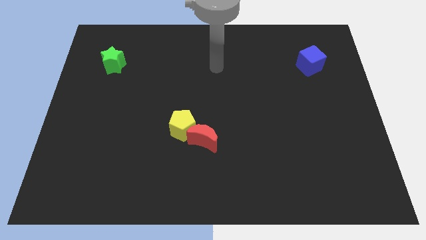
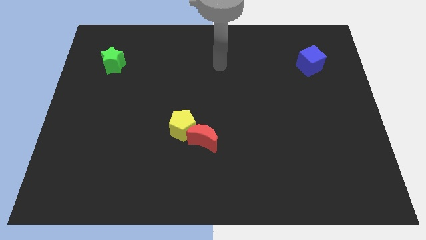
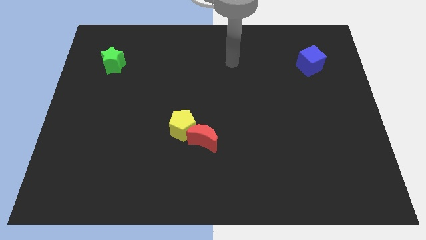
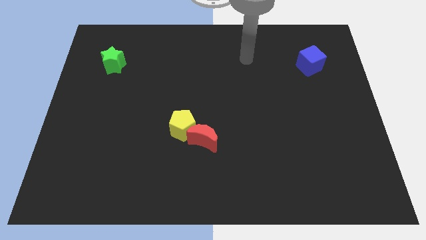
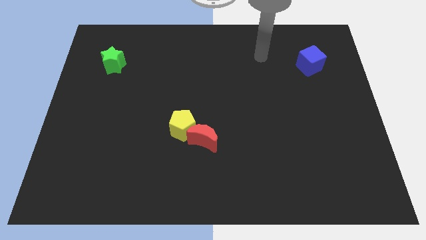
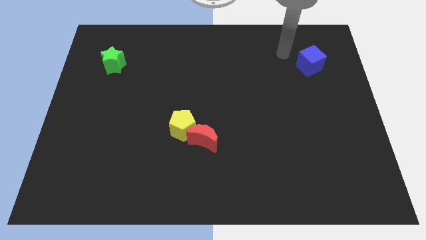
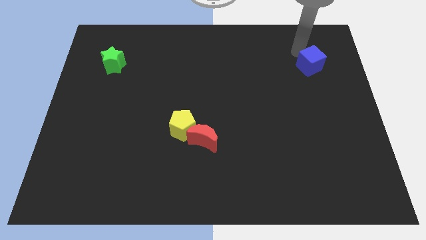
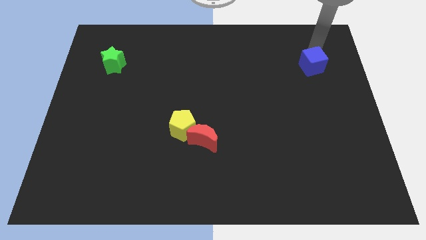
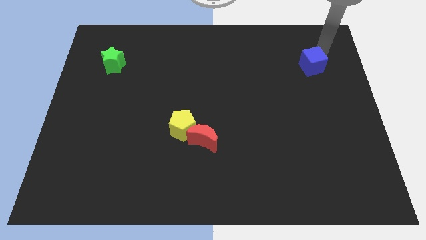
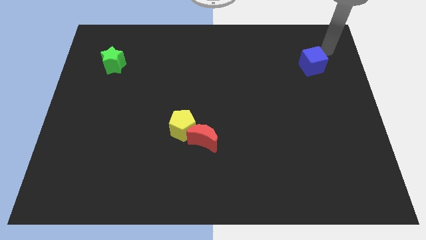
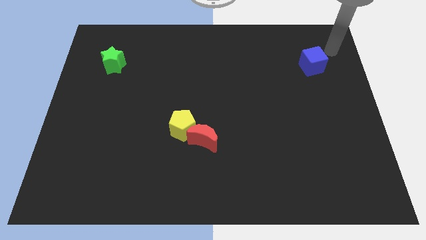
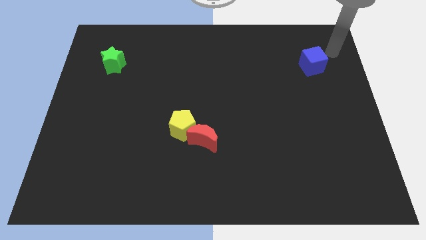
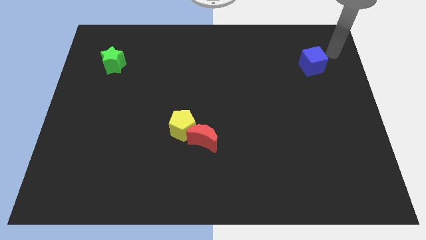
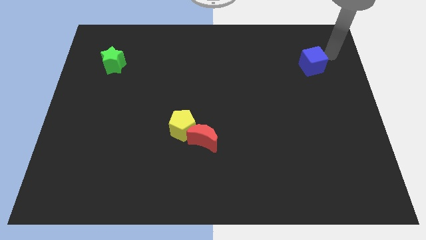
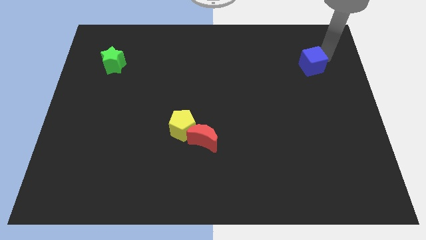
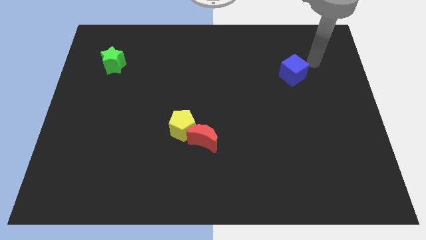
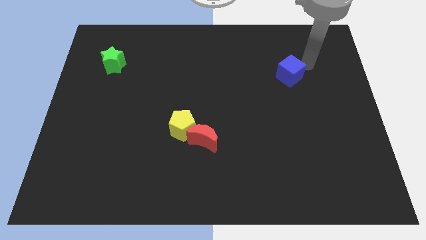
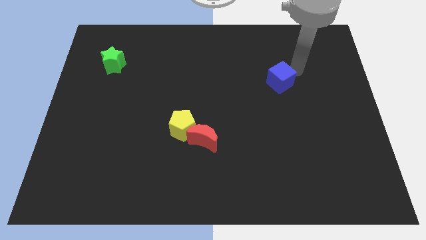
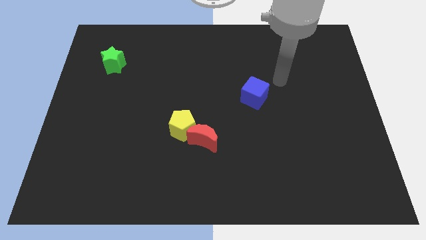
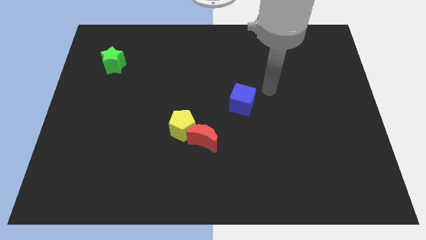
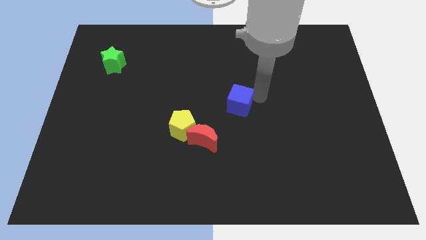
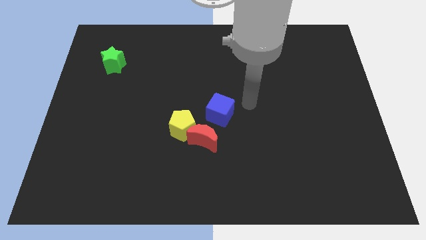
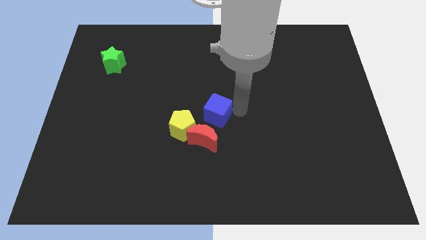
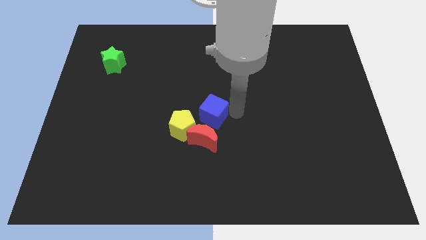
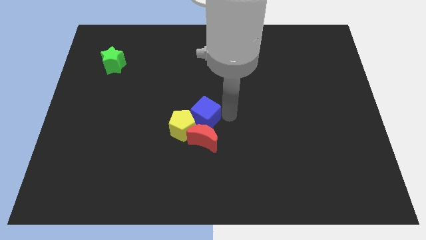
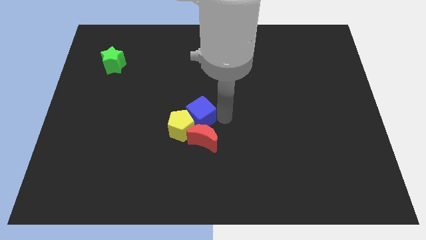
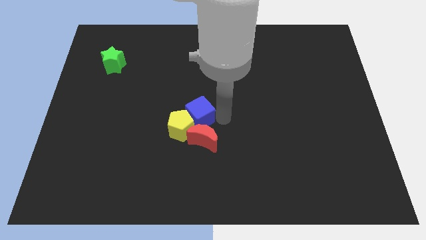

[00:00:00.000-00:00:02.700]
push the cube next to the moon

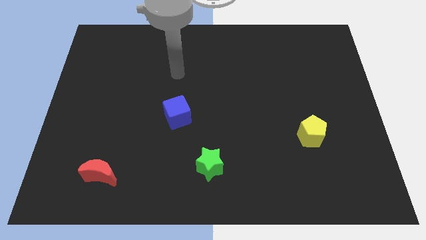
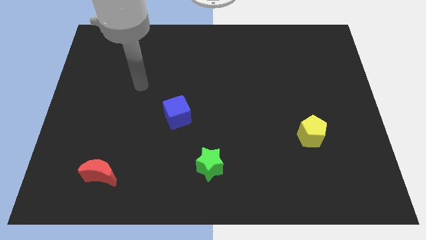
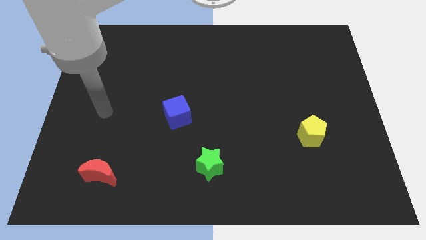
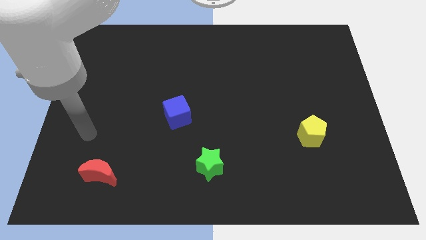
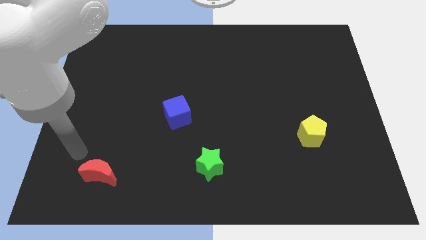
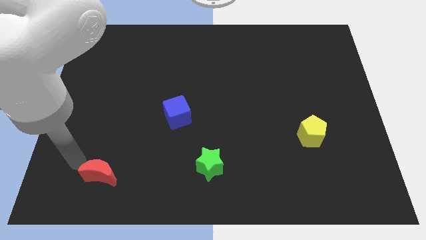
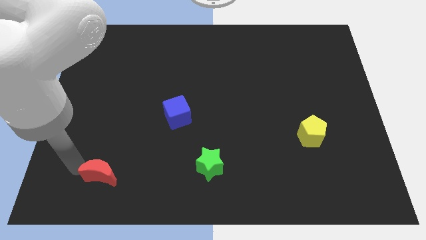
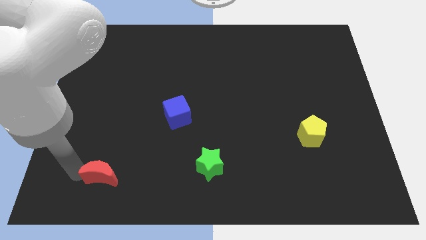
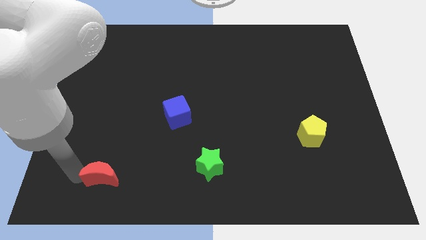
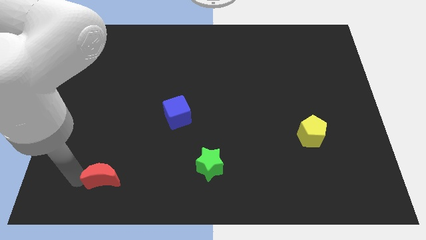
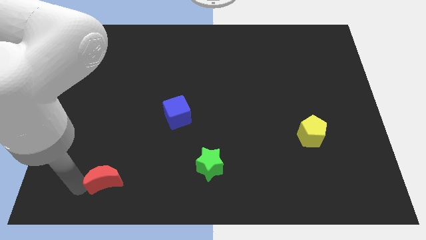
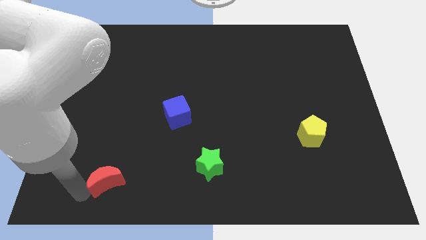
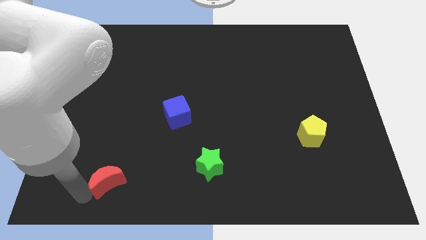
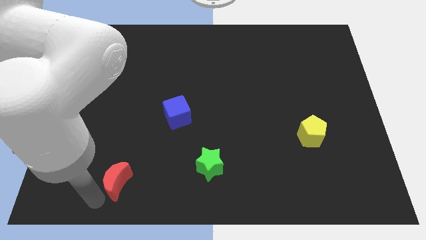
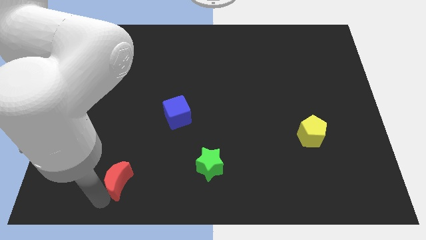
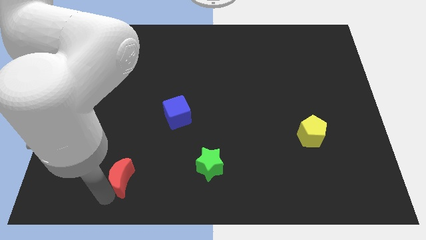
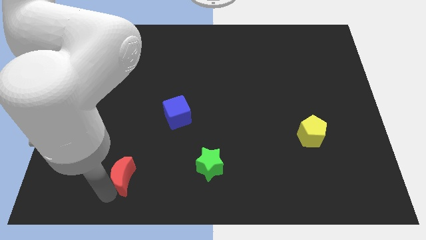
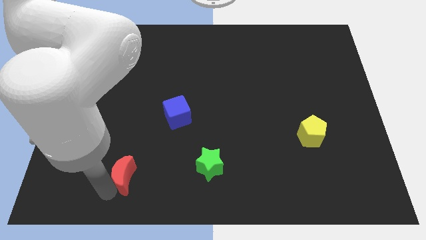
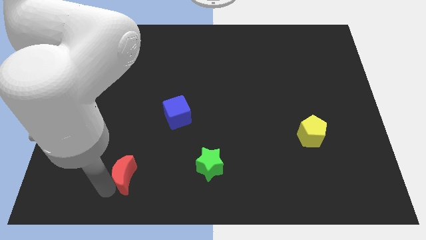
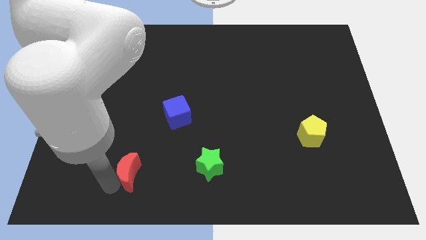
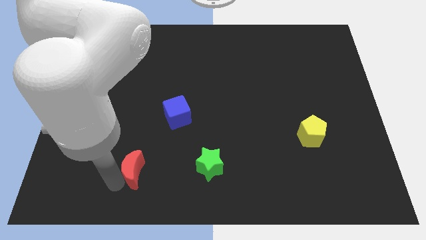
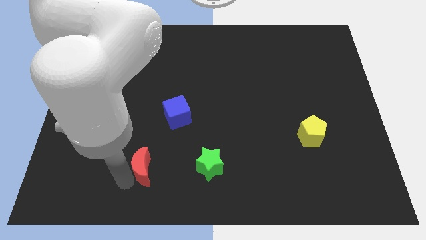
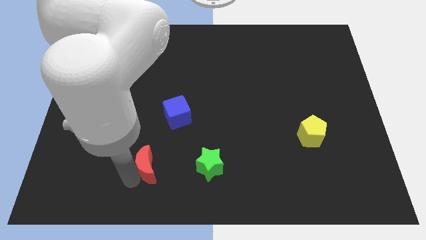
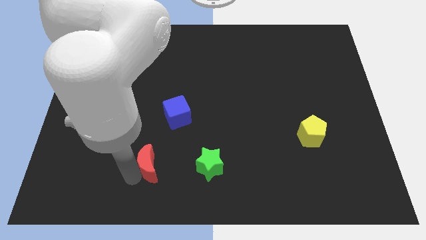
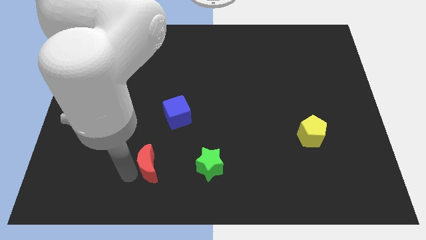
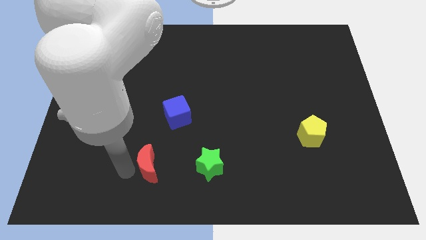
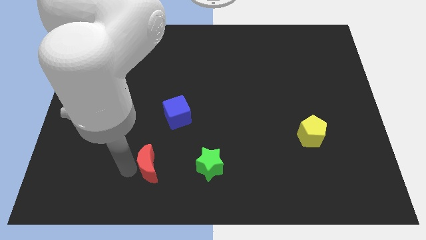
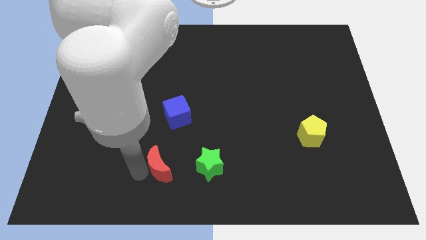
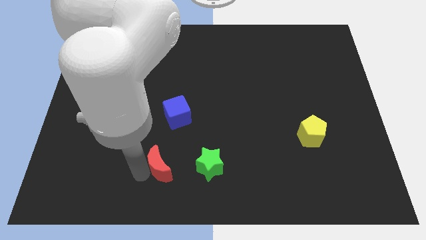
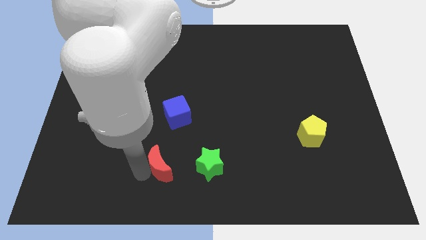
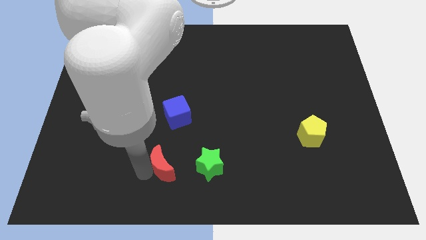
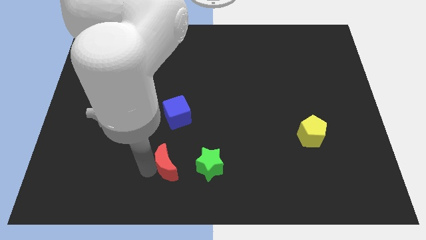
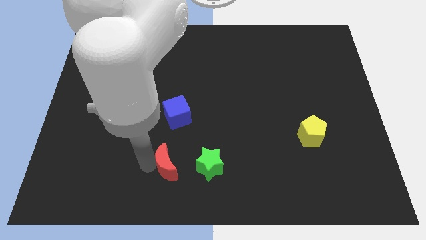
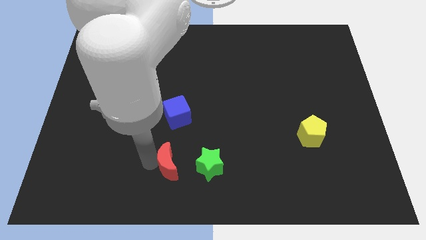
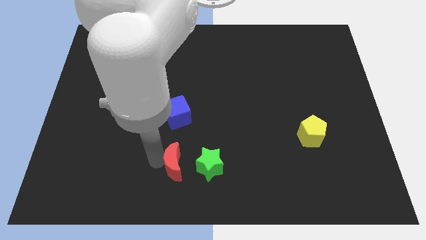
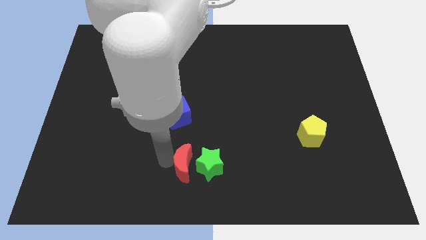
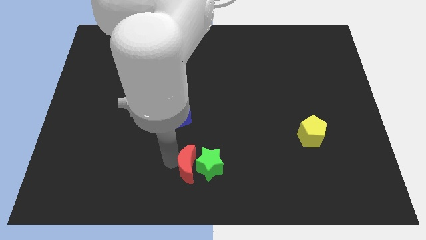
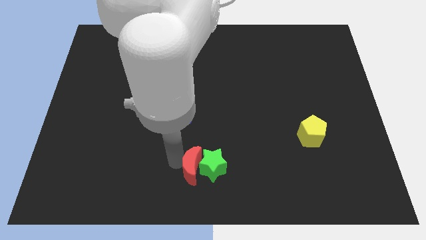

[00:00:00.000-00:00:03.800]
put the red block next to the star

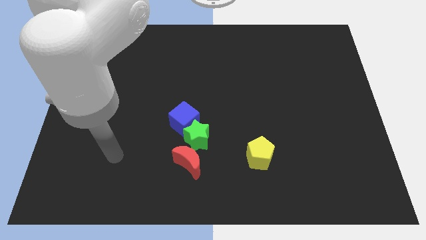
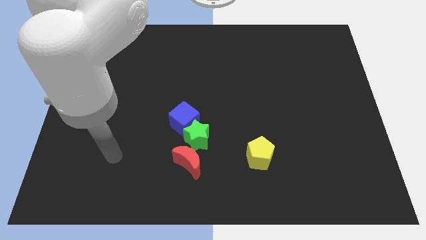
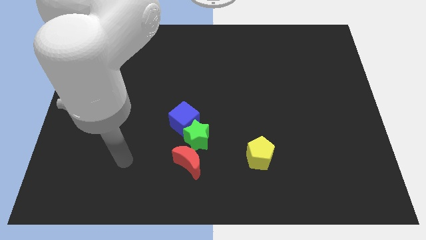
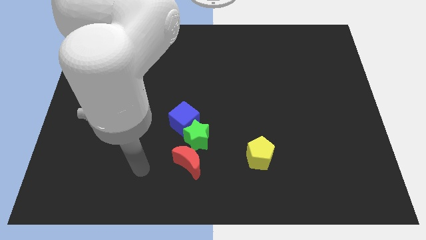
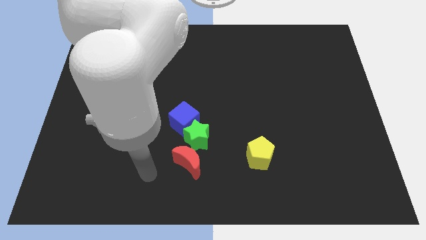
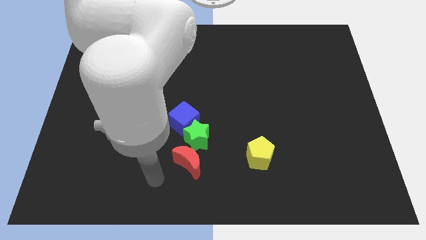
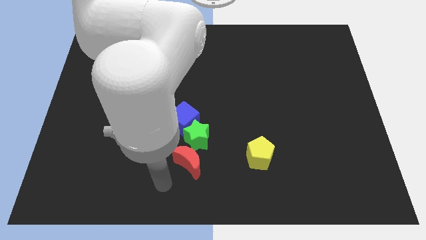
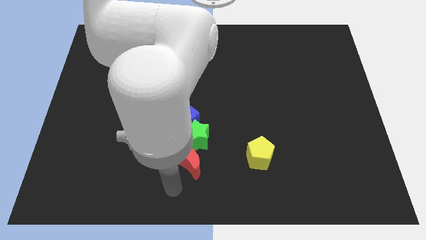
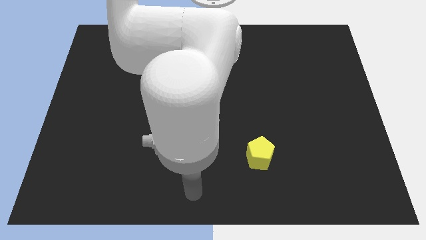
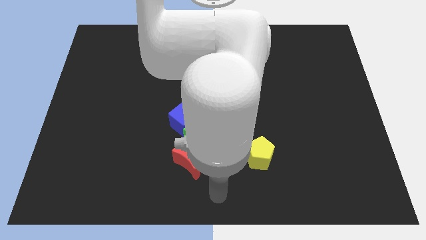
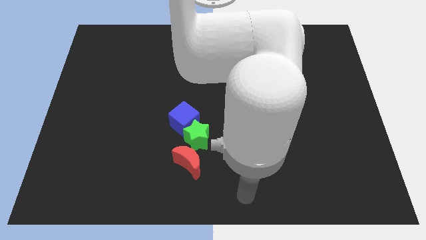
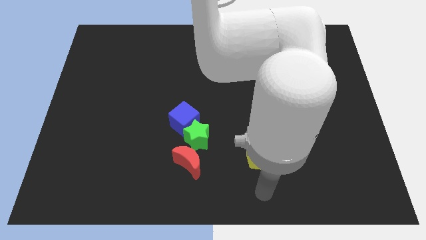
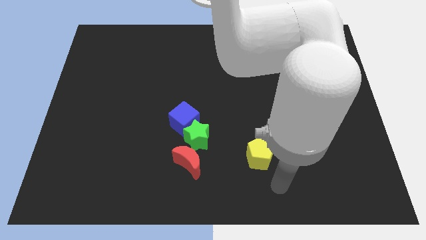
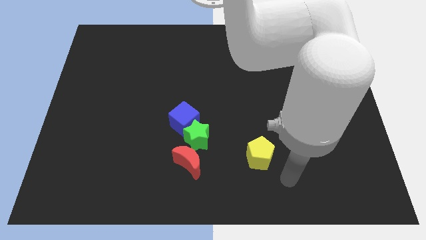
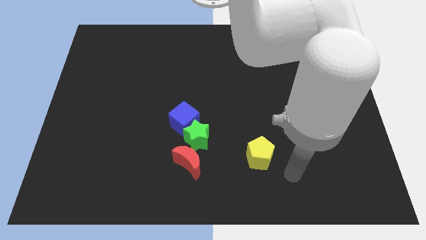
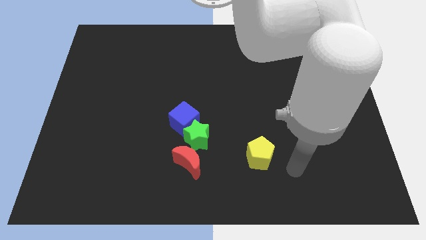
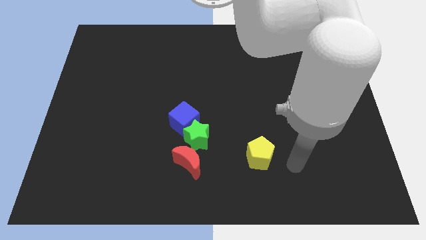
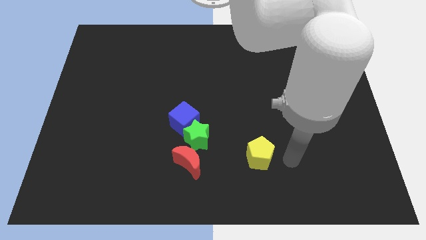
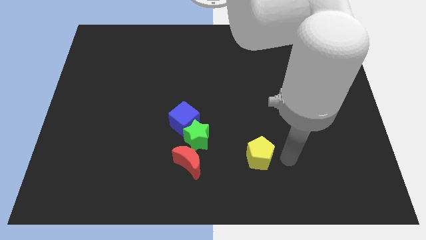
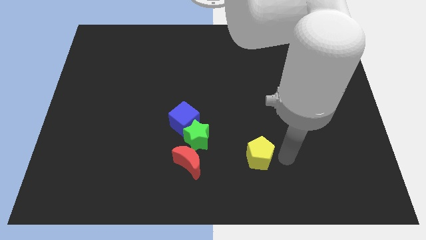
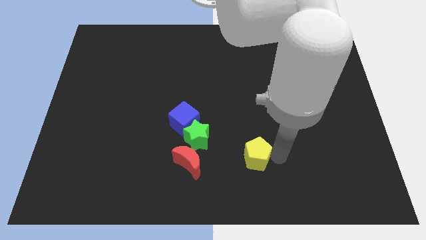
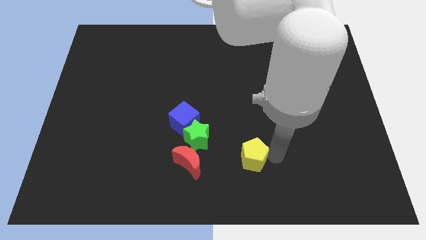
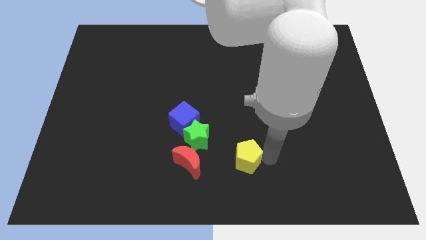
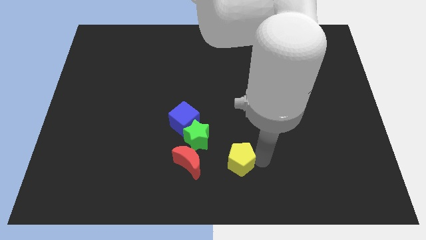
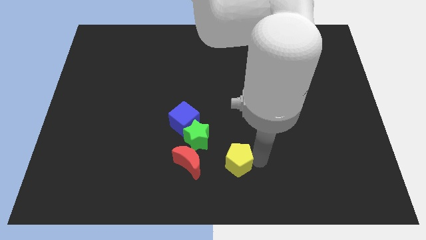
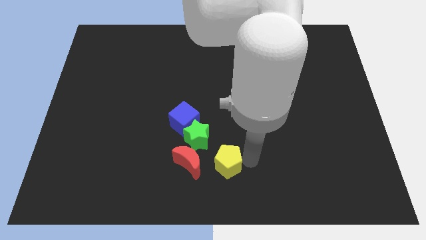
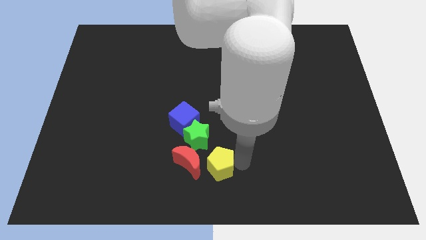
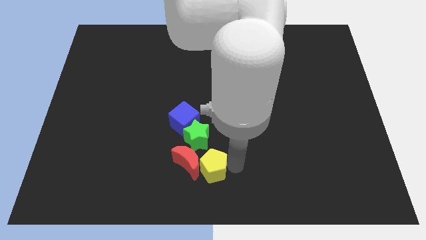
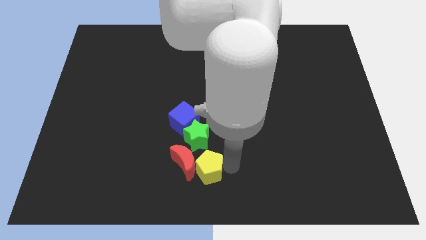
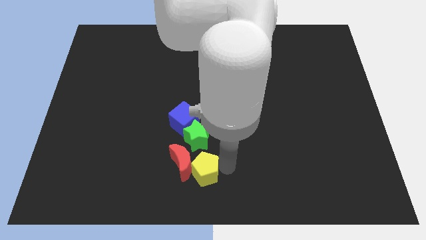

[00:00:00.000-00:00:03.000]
move the yellow block towards the moon
